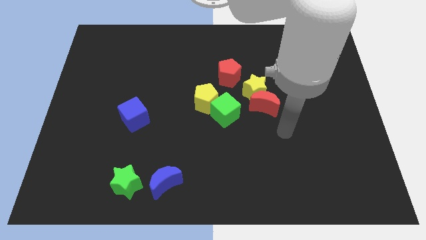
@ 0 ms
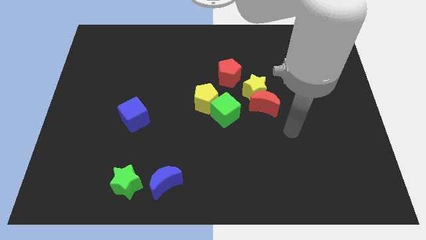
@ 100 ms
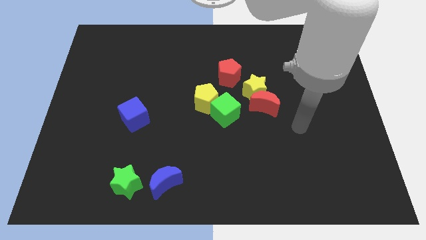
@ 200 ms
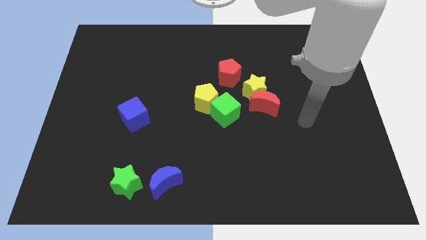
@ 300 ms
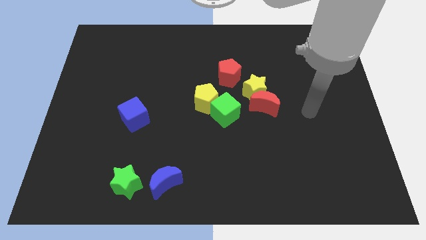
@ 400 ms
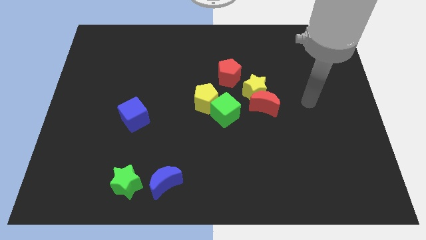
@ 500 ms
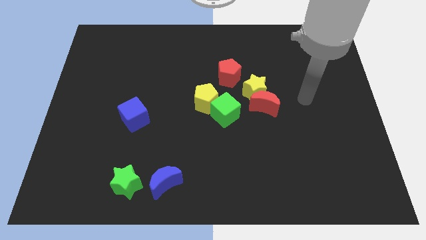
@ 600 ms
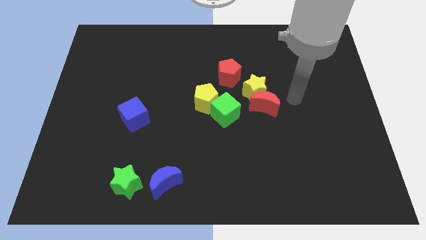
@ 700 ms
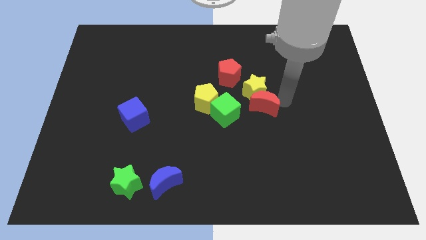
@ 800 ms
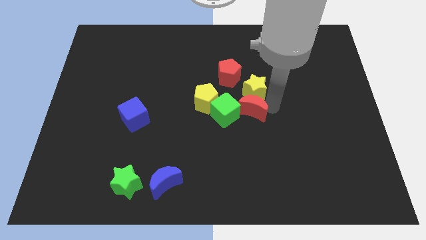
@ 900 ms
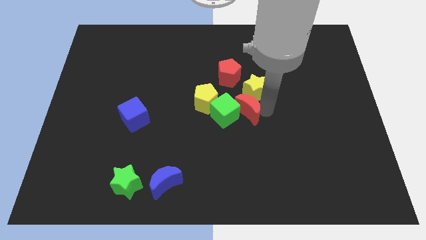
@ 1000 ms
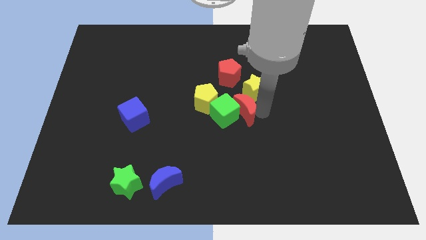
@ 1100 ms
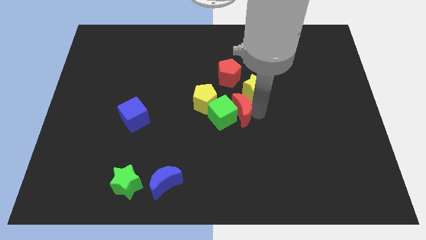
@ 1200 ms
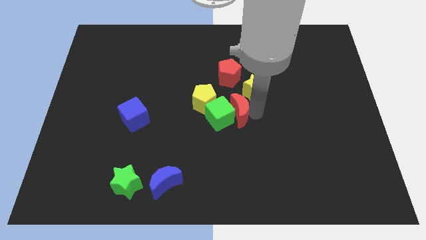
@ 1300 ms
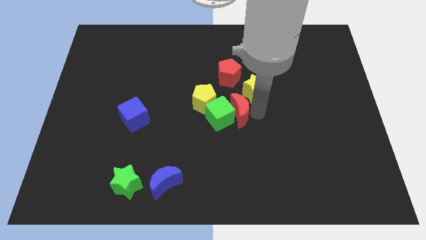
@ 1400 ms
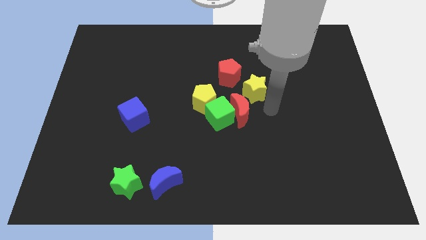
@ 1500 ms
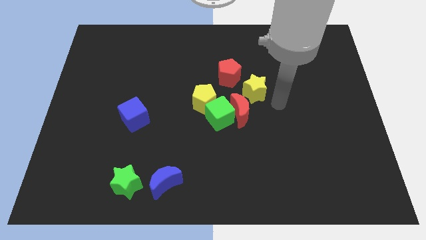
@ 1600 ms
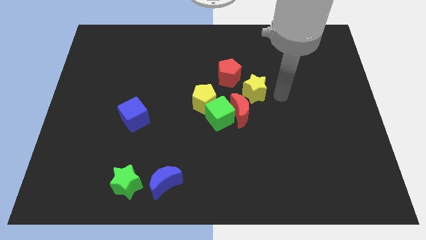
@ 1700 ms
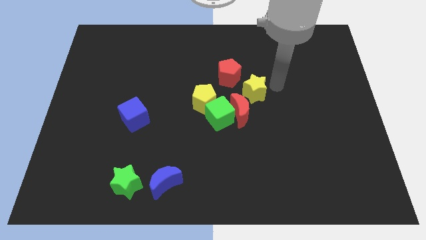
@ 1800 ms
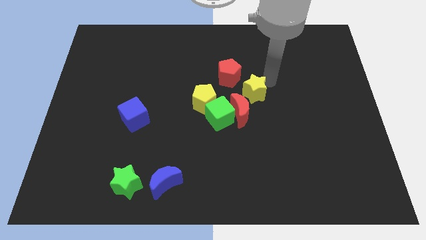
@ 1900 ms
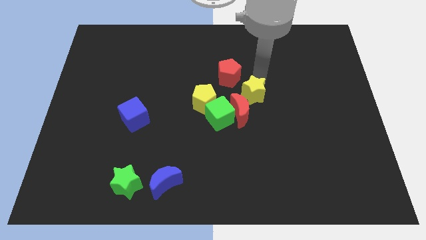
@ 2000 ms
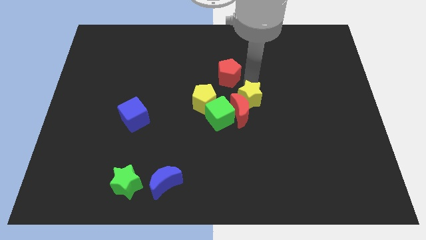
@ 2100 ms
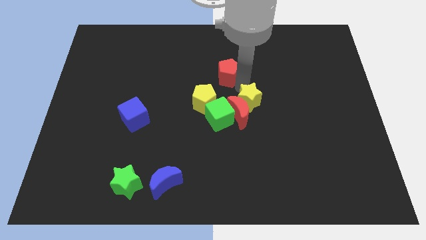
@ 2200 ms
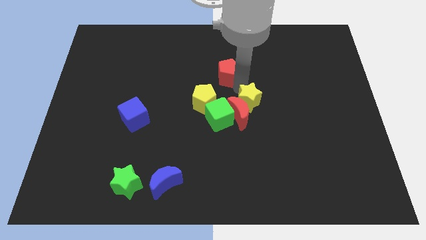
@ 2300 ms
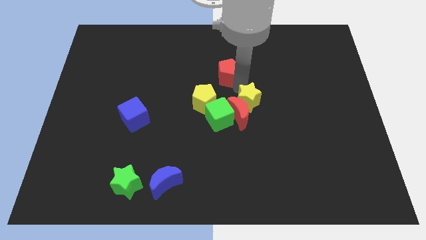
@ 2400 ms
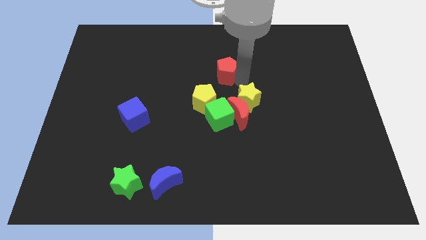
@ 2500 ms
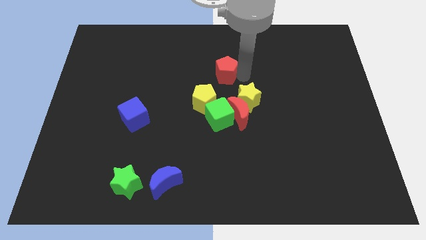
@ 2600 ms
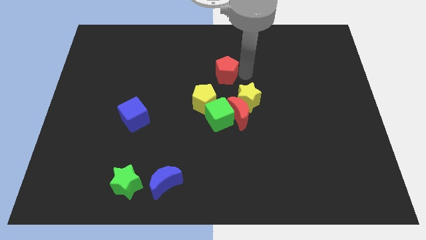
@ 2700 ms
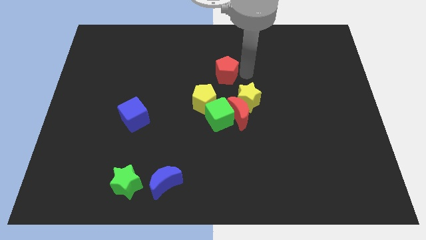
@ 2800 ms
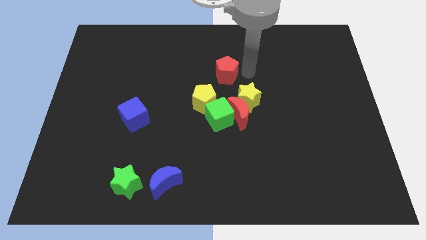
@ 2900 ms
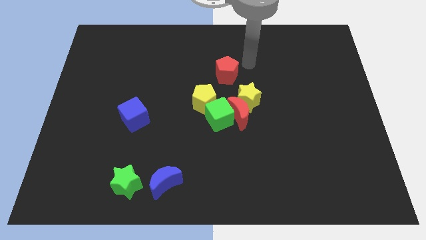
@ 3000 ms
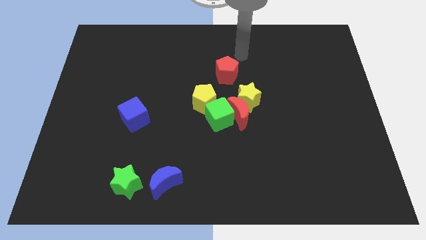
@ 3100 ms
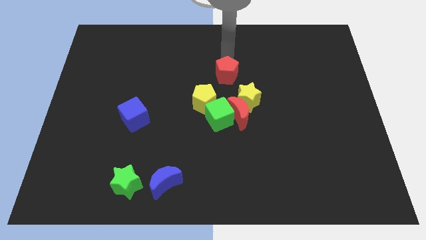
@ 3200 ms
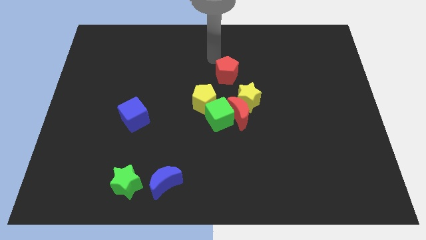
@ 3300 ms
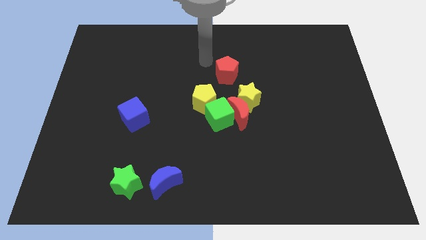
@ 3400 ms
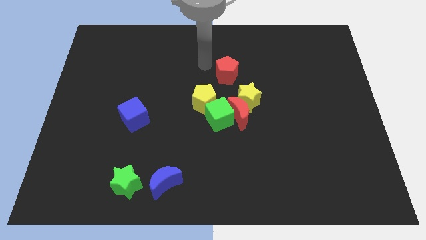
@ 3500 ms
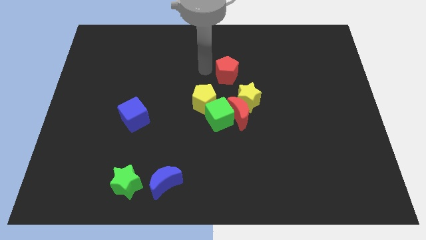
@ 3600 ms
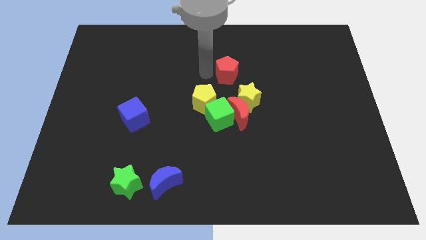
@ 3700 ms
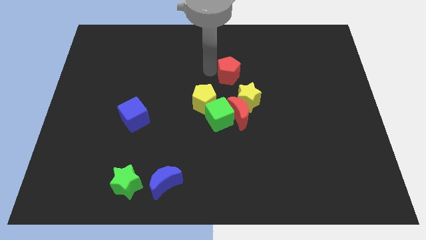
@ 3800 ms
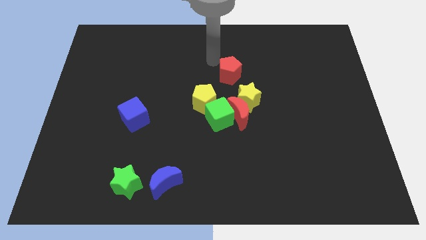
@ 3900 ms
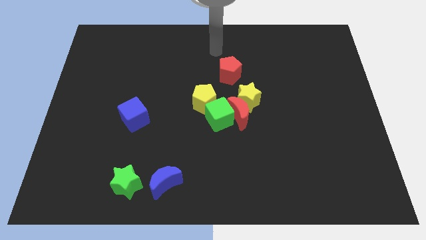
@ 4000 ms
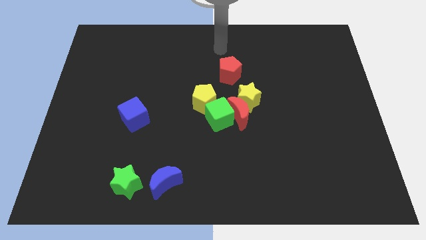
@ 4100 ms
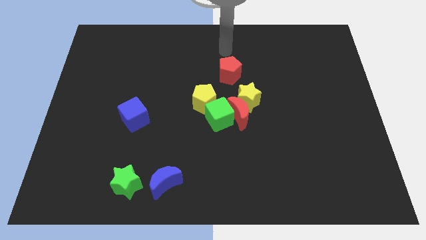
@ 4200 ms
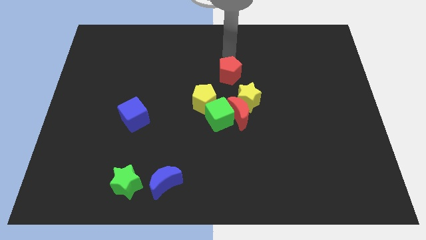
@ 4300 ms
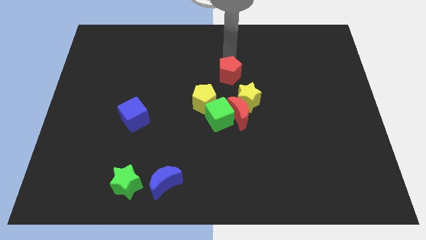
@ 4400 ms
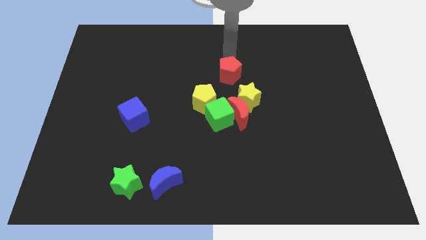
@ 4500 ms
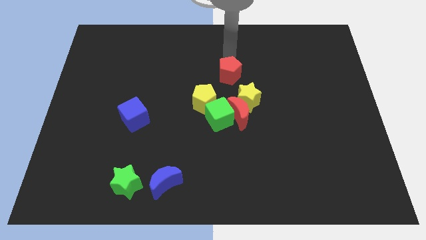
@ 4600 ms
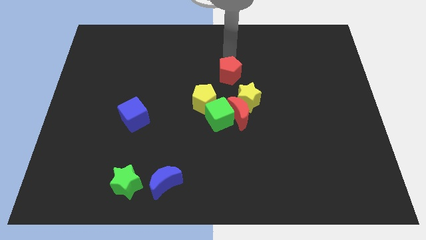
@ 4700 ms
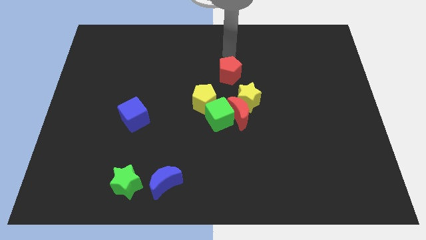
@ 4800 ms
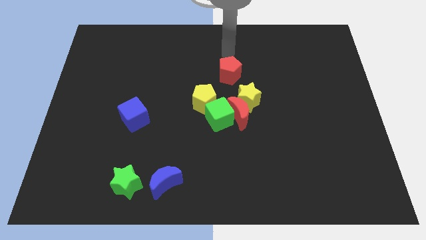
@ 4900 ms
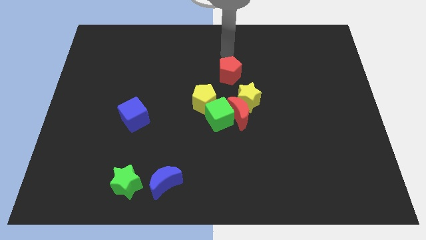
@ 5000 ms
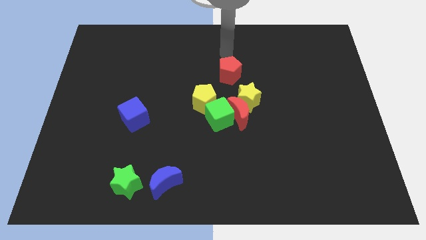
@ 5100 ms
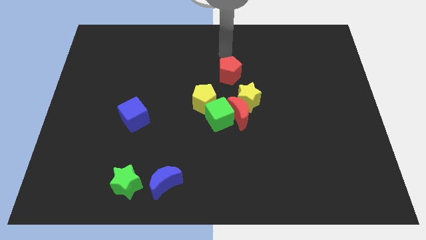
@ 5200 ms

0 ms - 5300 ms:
move the yellow star to the top right of red moon

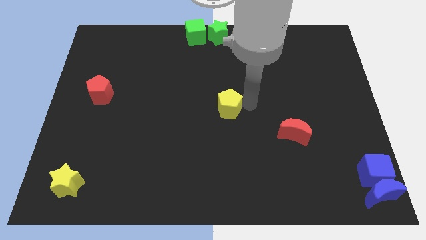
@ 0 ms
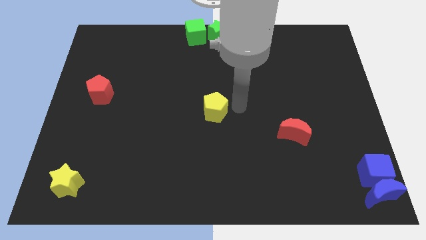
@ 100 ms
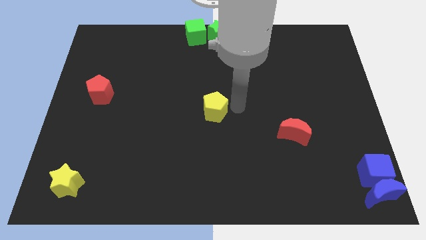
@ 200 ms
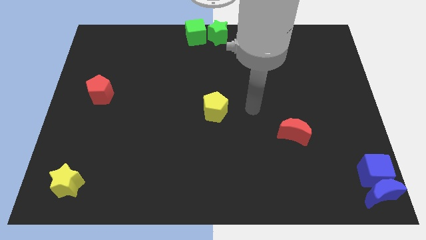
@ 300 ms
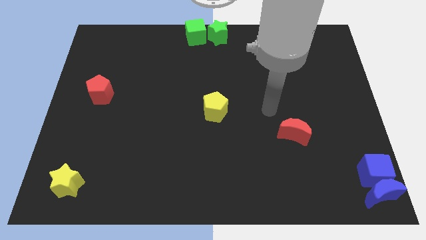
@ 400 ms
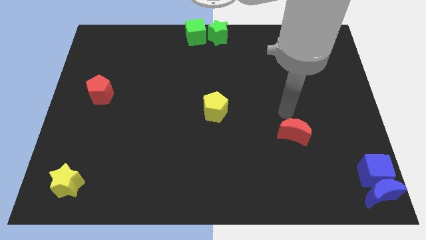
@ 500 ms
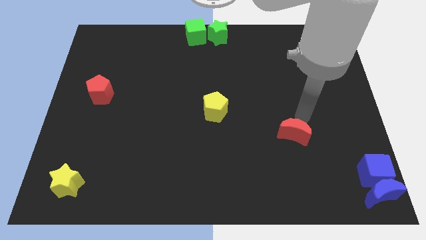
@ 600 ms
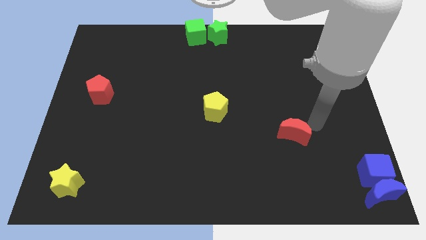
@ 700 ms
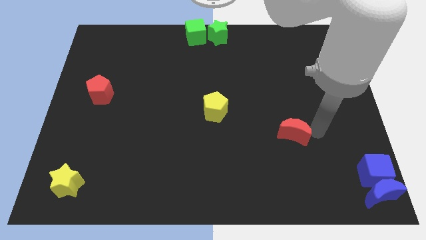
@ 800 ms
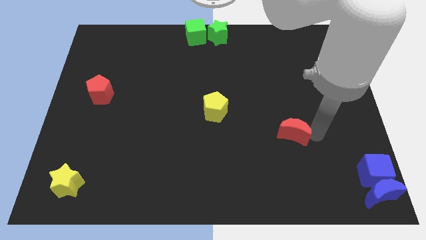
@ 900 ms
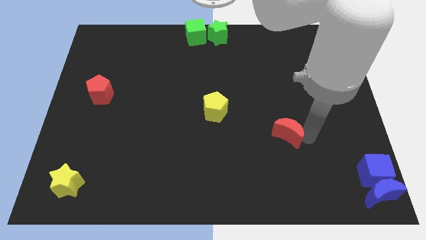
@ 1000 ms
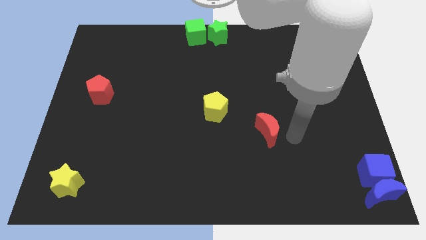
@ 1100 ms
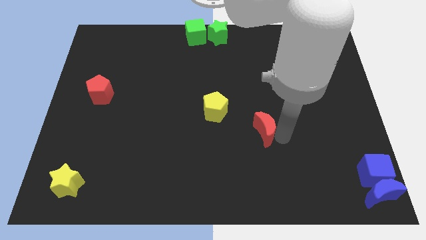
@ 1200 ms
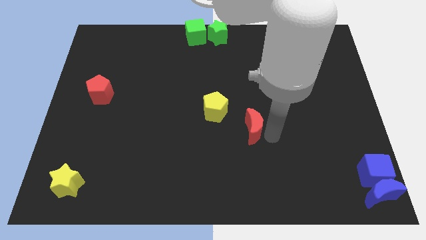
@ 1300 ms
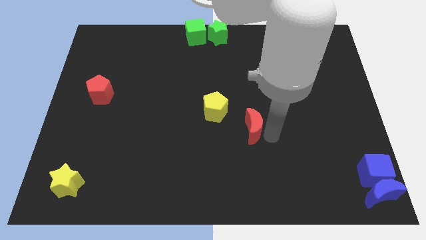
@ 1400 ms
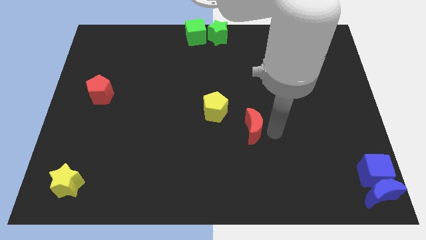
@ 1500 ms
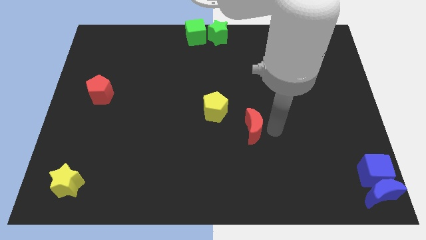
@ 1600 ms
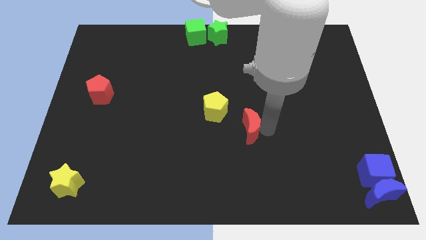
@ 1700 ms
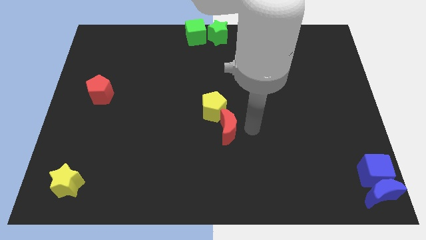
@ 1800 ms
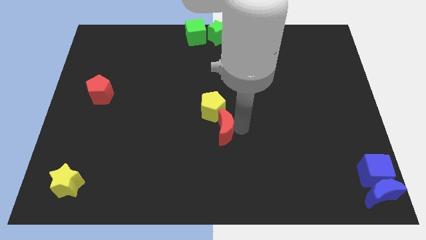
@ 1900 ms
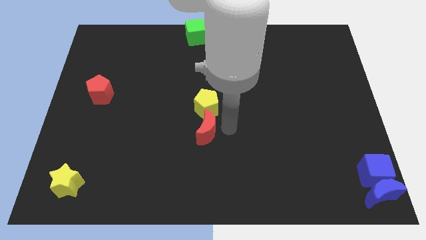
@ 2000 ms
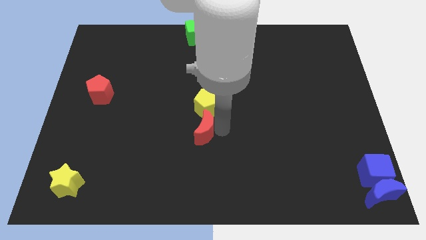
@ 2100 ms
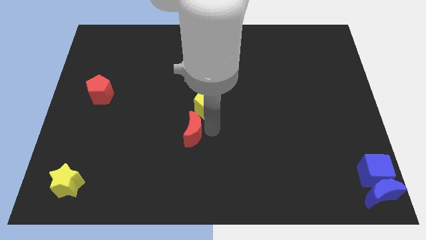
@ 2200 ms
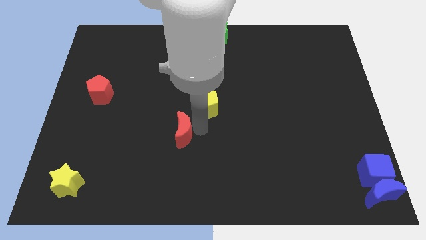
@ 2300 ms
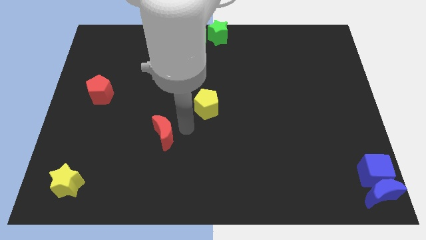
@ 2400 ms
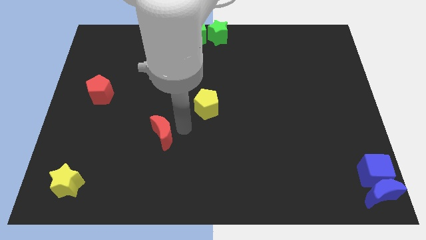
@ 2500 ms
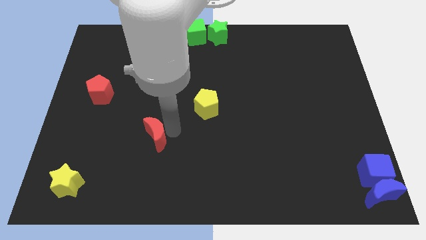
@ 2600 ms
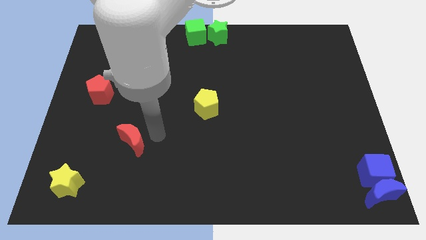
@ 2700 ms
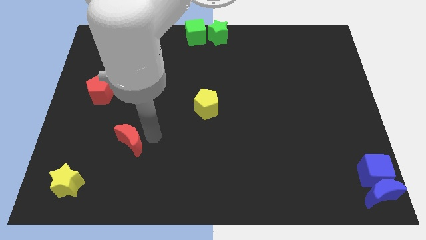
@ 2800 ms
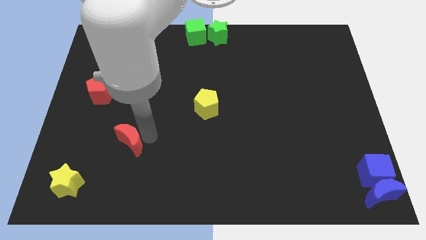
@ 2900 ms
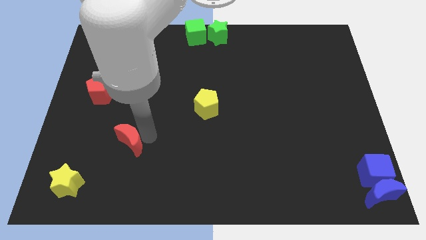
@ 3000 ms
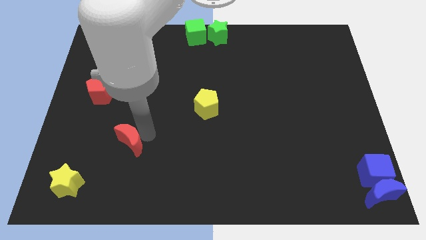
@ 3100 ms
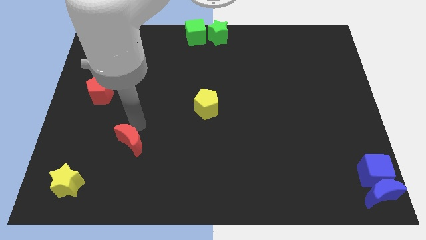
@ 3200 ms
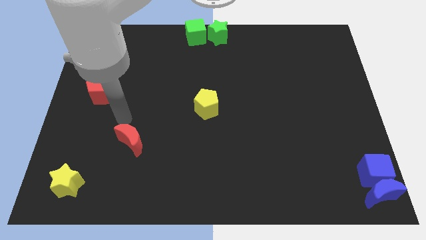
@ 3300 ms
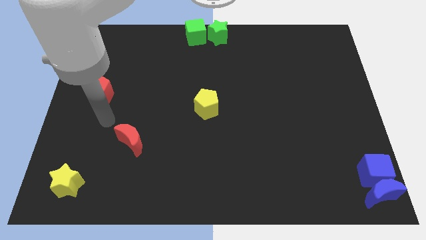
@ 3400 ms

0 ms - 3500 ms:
slide the red moon vertically to the bottom of the red pentagon

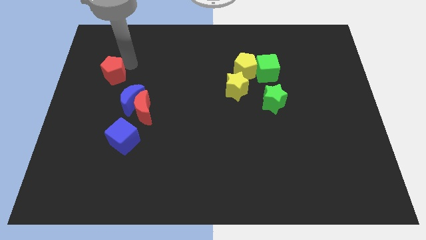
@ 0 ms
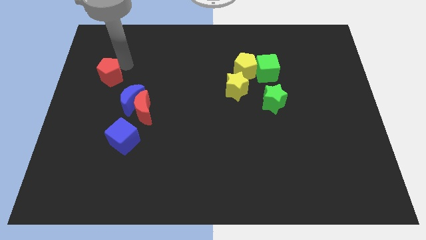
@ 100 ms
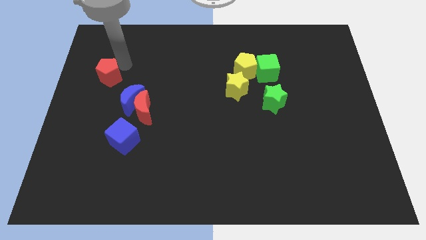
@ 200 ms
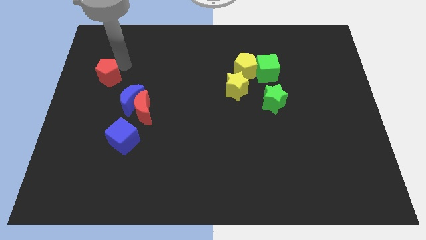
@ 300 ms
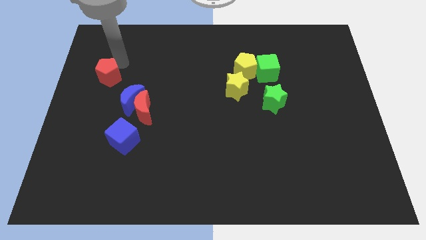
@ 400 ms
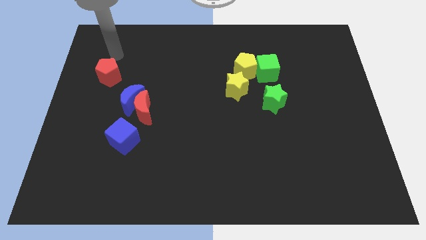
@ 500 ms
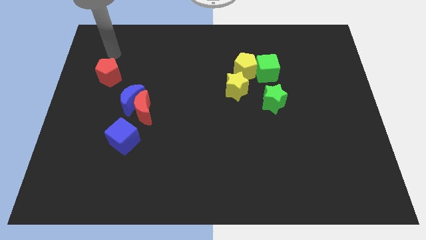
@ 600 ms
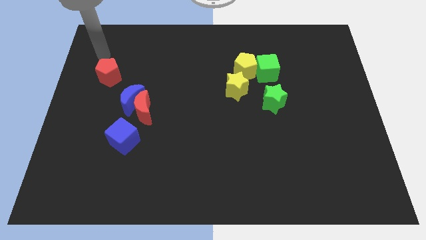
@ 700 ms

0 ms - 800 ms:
put arm on top of red pentagon
